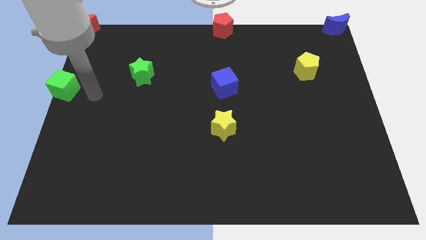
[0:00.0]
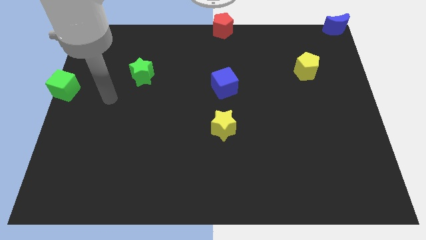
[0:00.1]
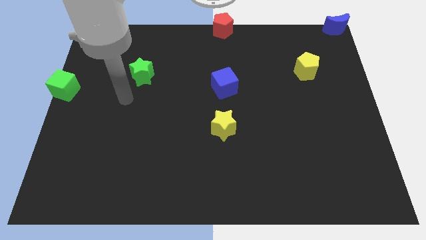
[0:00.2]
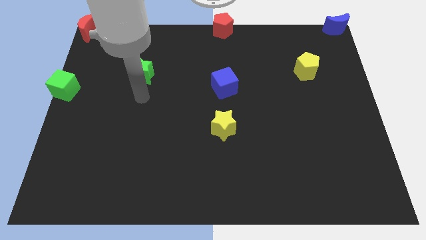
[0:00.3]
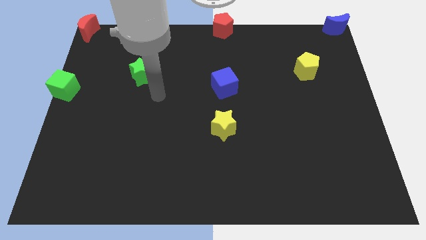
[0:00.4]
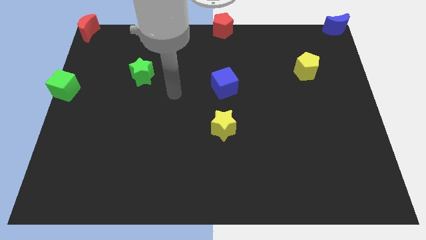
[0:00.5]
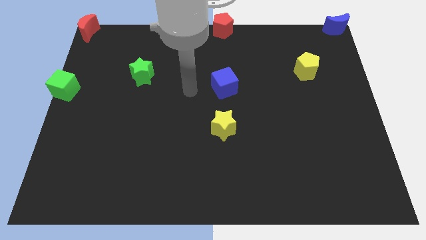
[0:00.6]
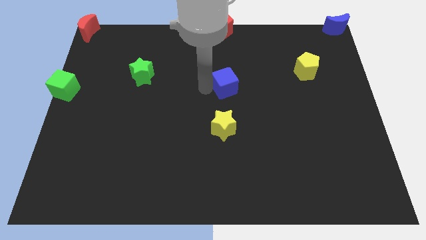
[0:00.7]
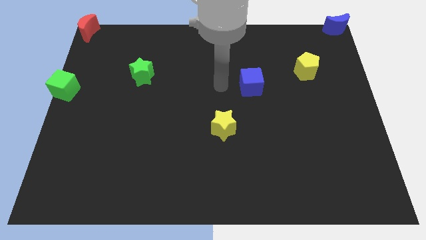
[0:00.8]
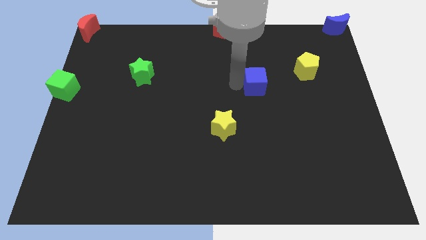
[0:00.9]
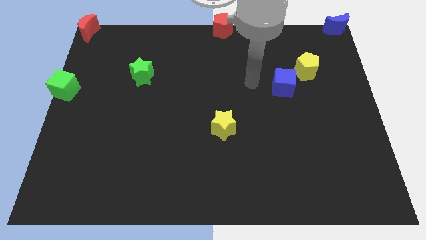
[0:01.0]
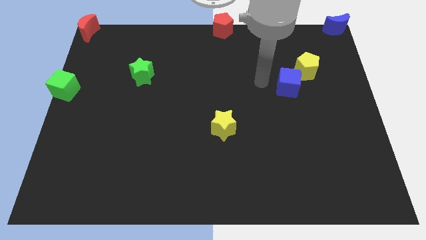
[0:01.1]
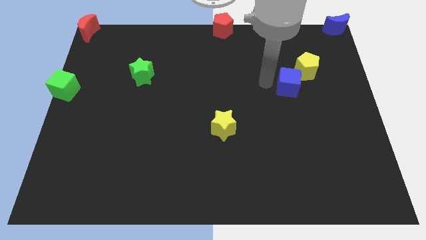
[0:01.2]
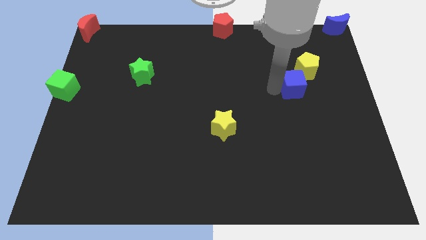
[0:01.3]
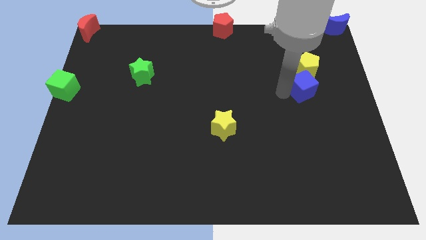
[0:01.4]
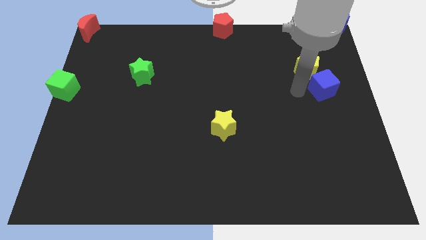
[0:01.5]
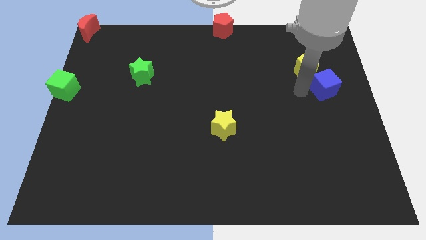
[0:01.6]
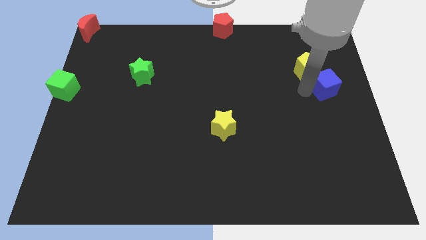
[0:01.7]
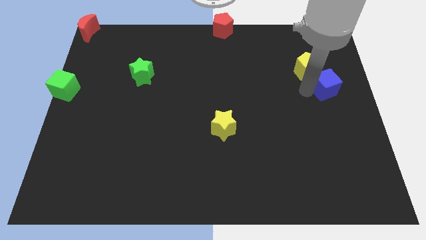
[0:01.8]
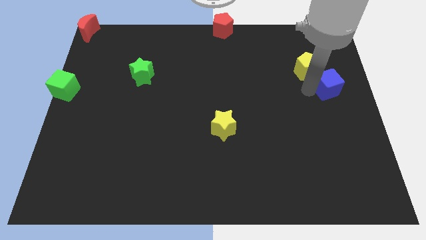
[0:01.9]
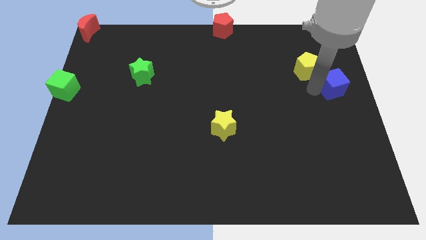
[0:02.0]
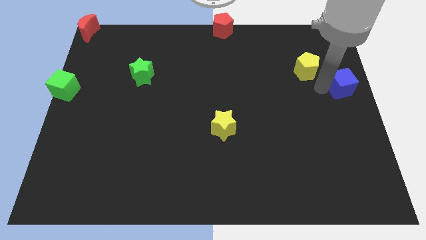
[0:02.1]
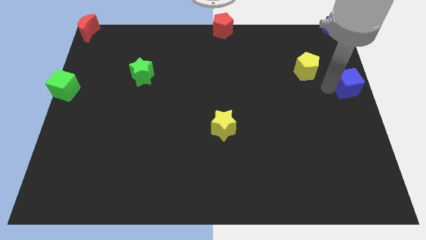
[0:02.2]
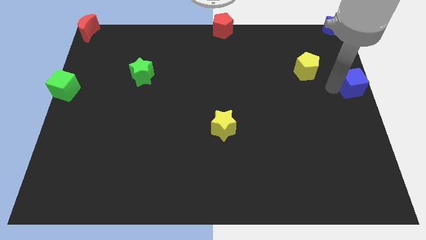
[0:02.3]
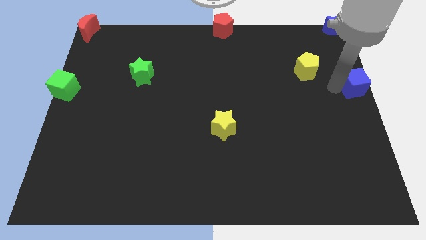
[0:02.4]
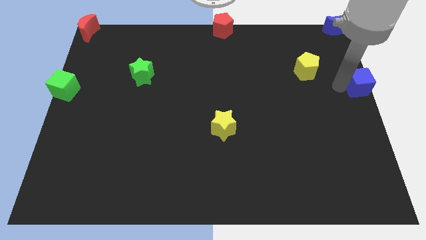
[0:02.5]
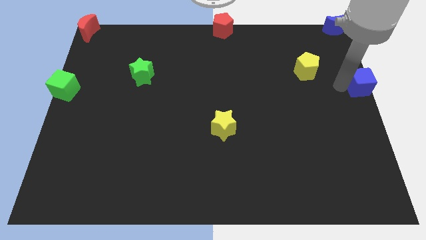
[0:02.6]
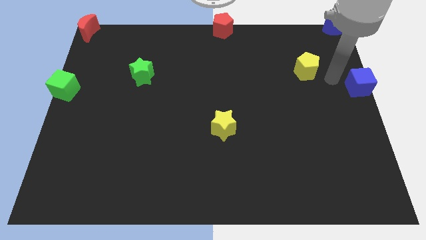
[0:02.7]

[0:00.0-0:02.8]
push the blue cube to the bottom of the blue crescent

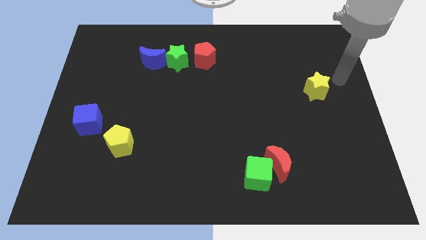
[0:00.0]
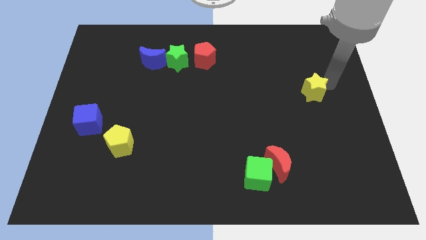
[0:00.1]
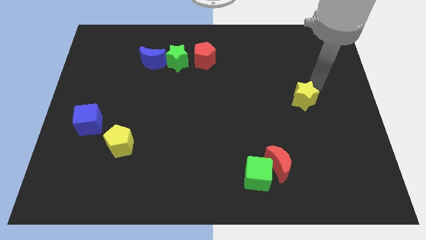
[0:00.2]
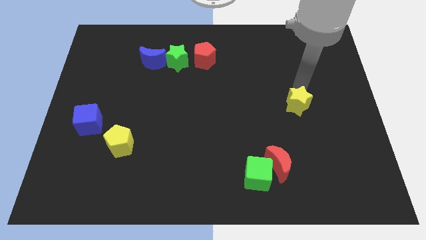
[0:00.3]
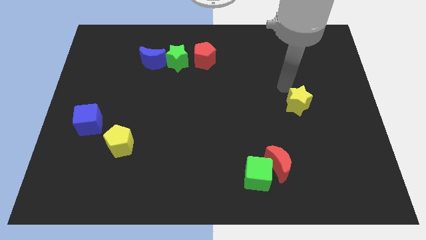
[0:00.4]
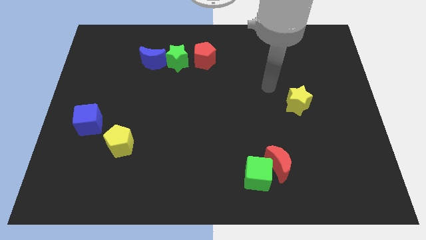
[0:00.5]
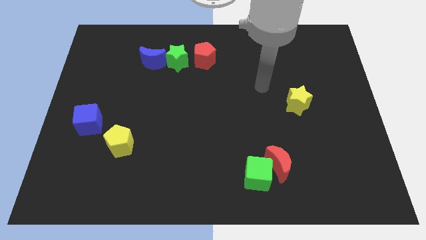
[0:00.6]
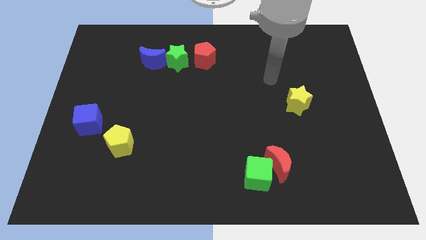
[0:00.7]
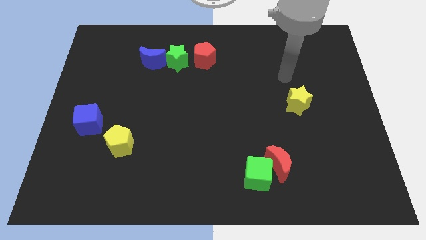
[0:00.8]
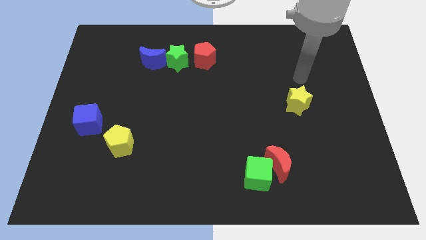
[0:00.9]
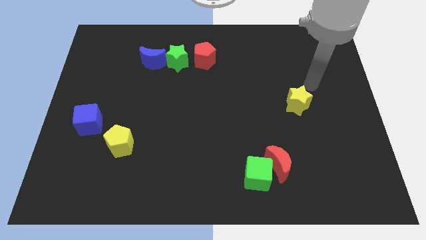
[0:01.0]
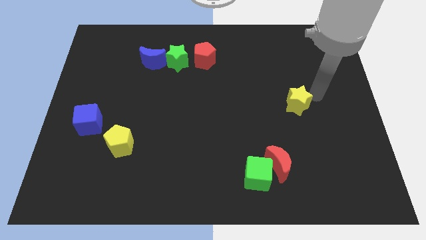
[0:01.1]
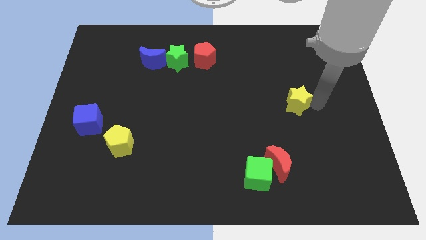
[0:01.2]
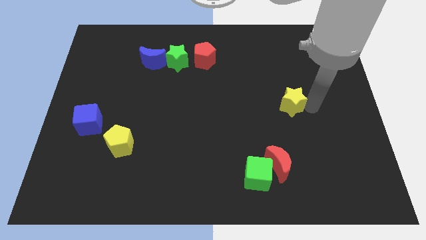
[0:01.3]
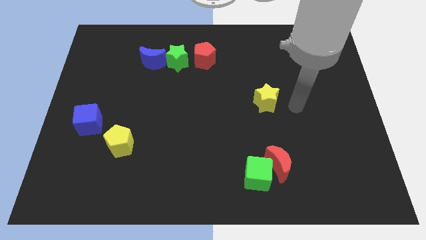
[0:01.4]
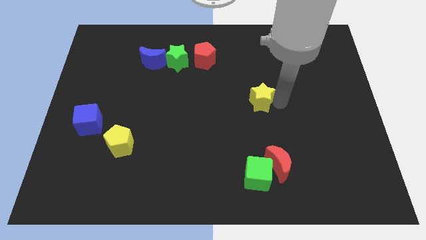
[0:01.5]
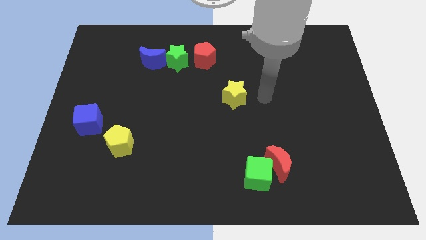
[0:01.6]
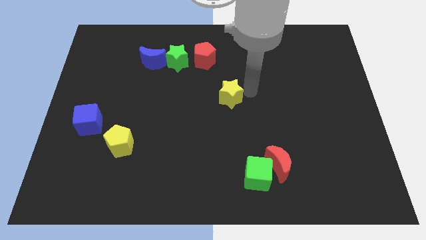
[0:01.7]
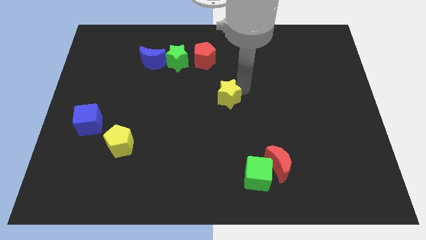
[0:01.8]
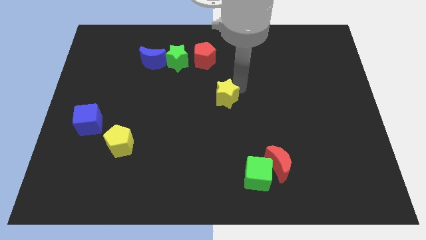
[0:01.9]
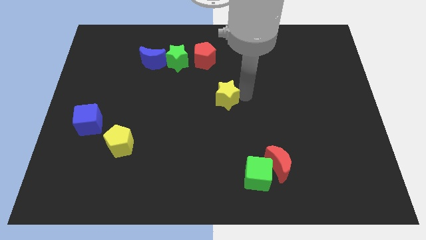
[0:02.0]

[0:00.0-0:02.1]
slide the yellow star towards the bottom right of the red pentagon

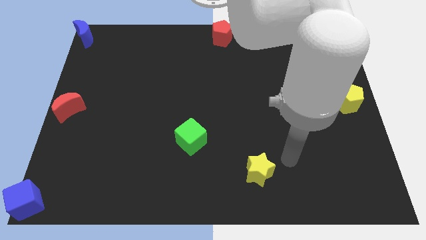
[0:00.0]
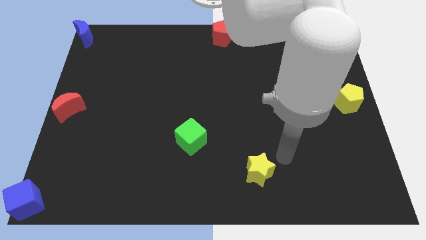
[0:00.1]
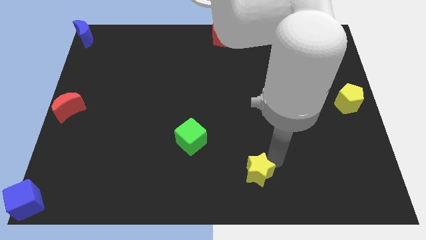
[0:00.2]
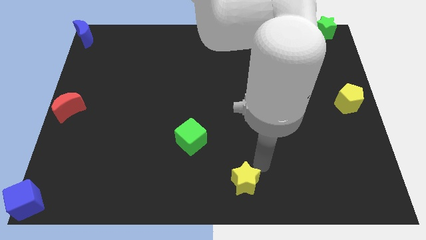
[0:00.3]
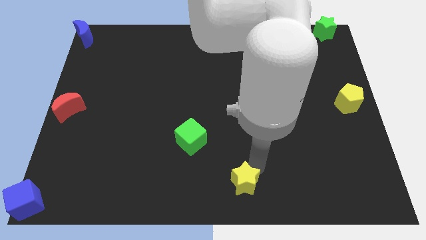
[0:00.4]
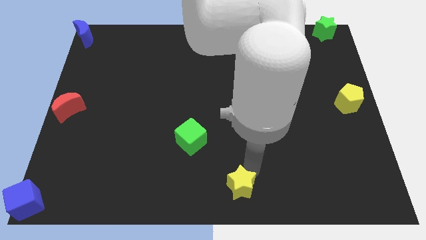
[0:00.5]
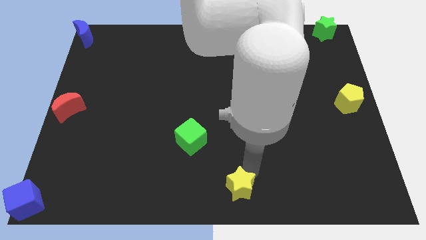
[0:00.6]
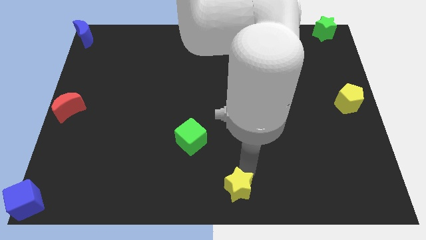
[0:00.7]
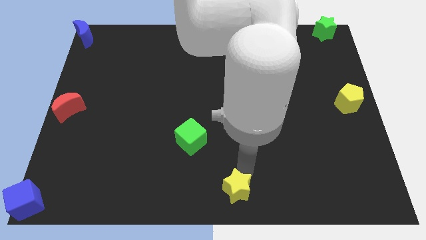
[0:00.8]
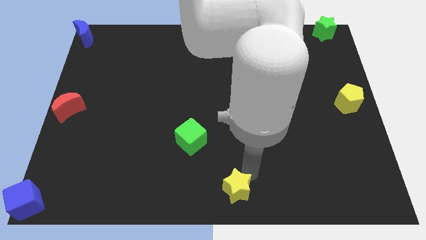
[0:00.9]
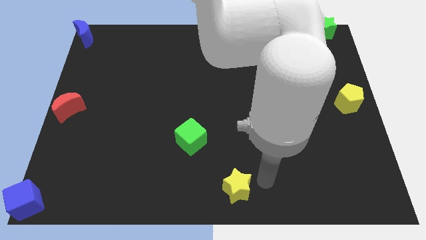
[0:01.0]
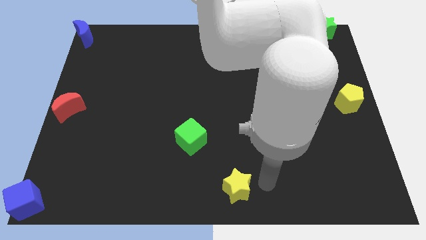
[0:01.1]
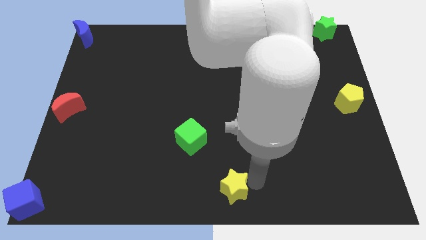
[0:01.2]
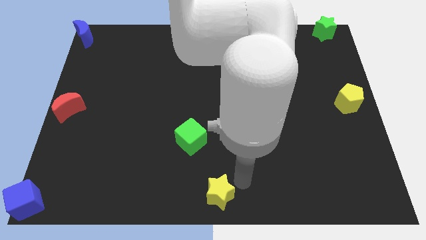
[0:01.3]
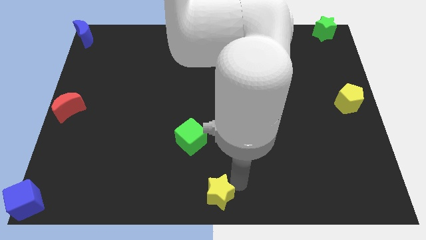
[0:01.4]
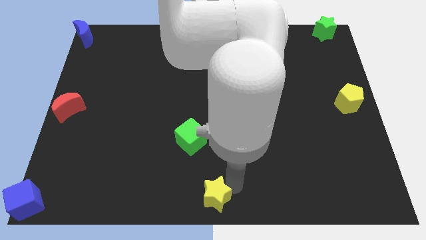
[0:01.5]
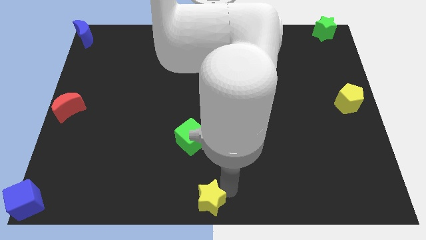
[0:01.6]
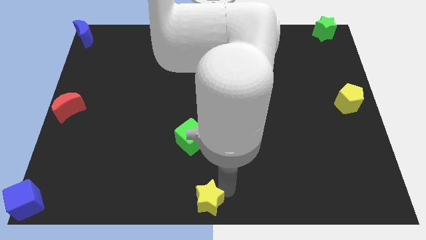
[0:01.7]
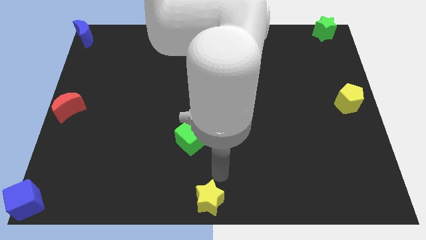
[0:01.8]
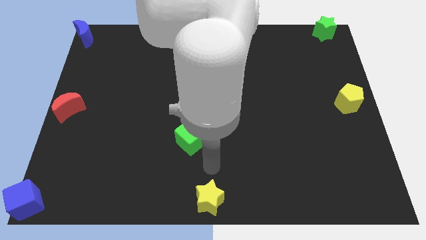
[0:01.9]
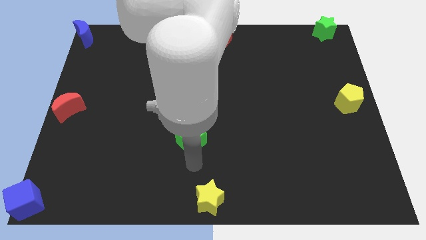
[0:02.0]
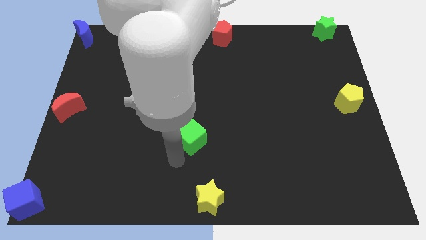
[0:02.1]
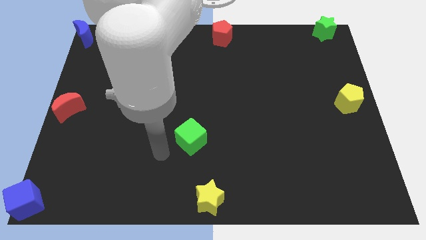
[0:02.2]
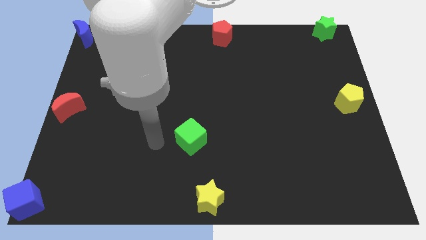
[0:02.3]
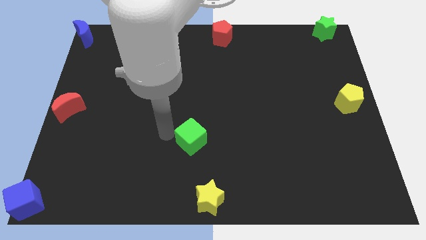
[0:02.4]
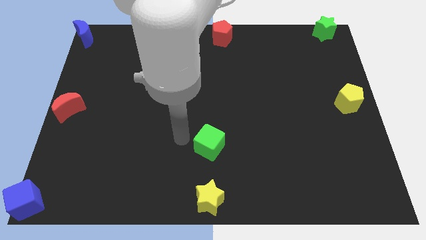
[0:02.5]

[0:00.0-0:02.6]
place the yellow star to the bottom center of the board

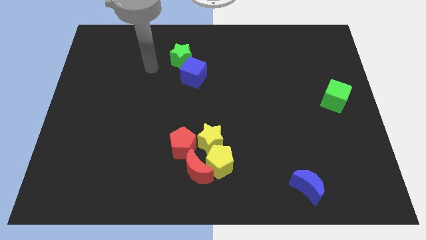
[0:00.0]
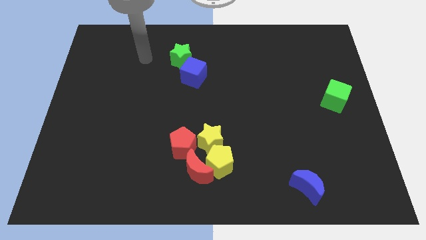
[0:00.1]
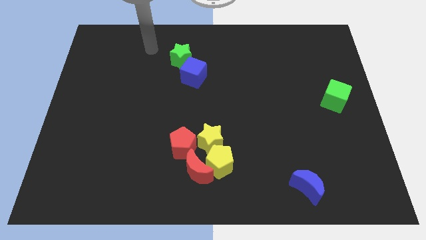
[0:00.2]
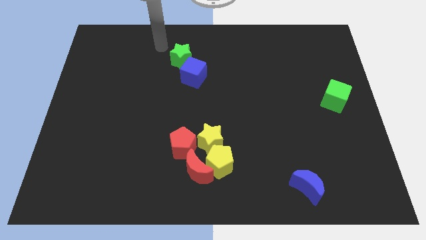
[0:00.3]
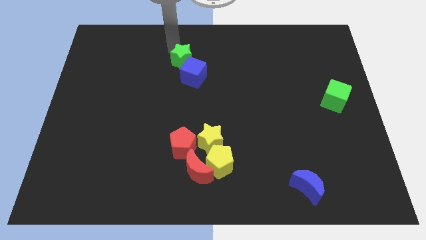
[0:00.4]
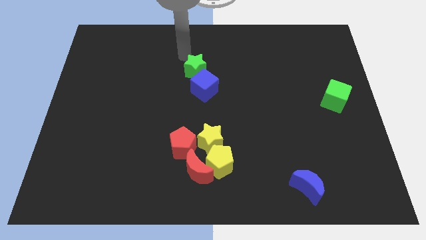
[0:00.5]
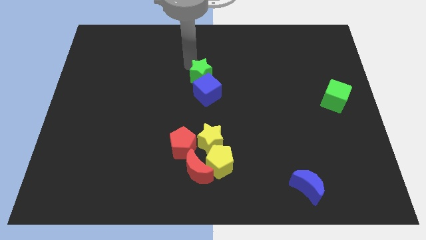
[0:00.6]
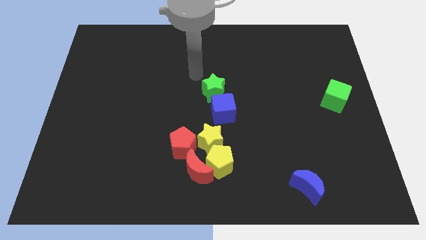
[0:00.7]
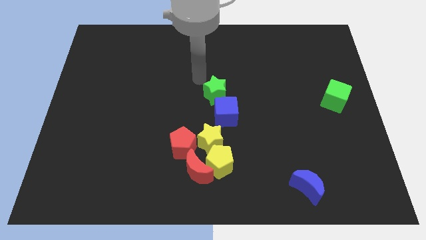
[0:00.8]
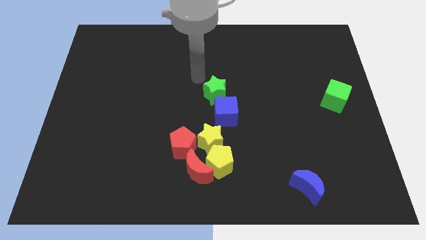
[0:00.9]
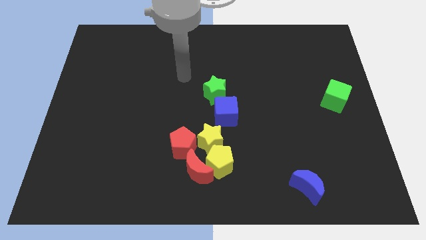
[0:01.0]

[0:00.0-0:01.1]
push the blue cube with green star to the center of the board

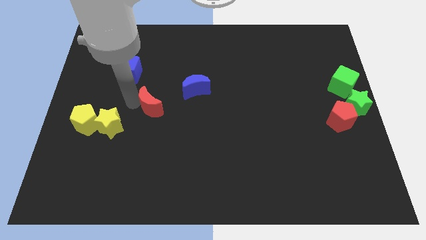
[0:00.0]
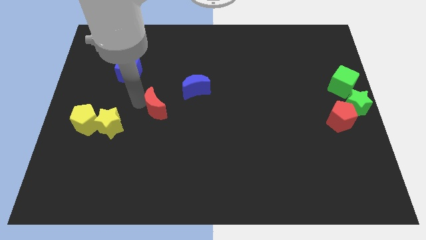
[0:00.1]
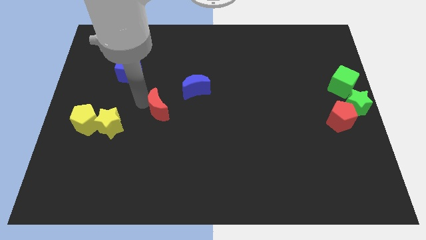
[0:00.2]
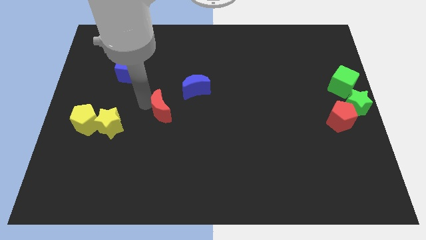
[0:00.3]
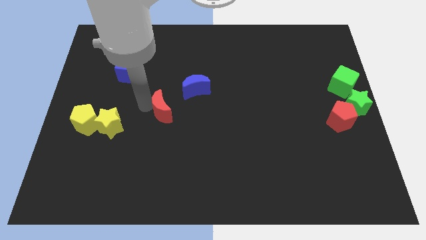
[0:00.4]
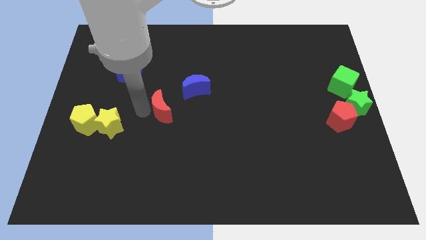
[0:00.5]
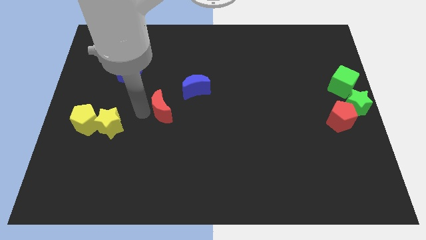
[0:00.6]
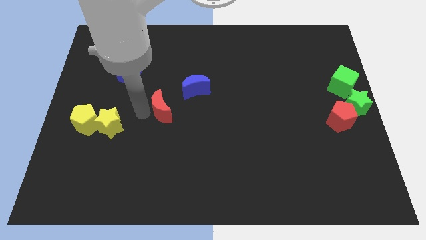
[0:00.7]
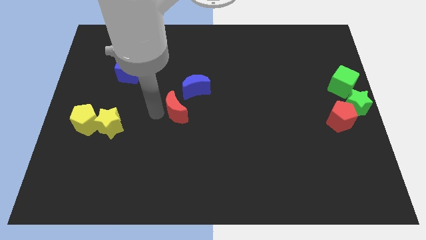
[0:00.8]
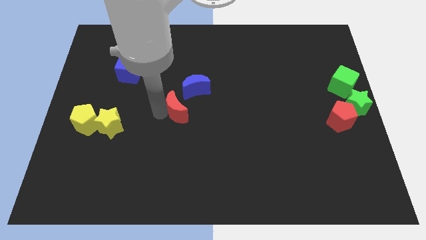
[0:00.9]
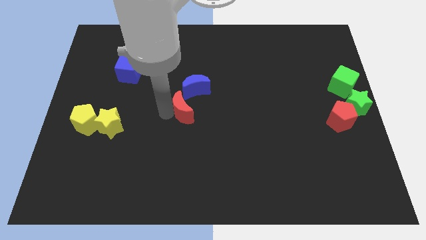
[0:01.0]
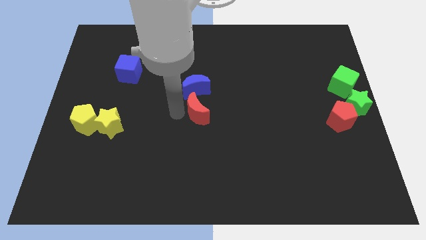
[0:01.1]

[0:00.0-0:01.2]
place the red moon below the blue moon
